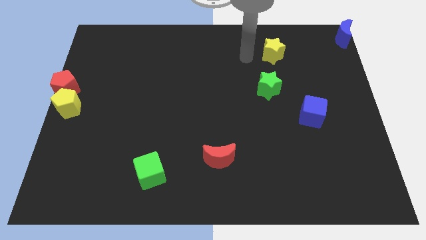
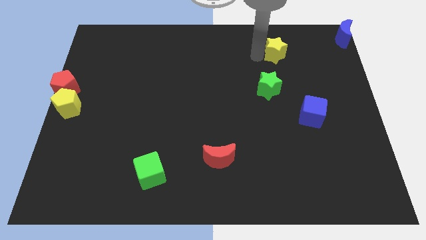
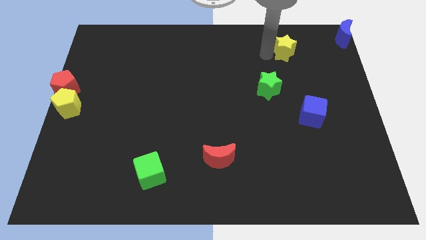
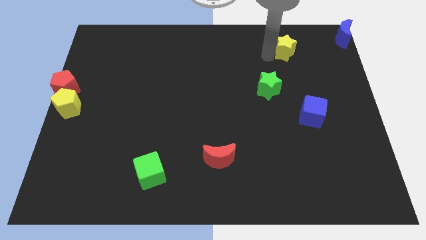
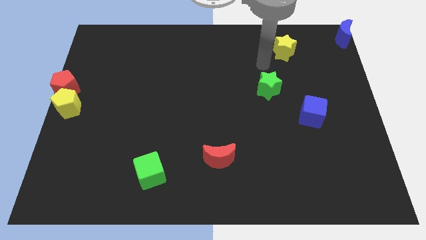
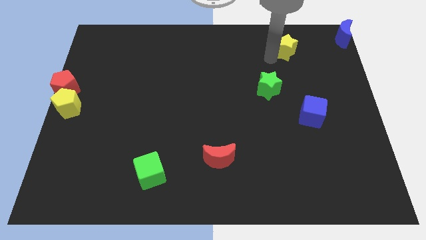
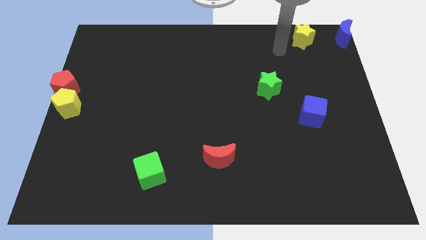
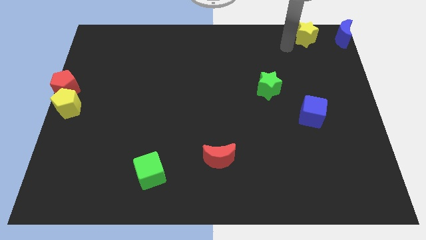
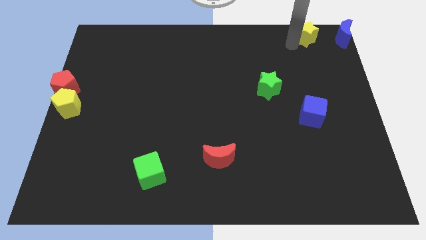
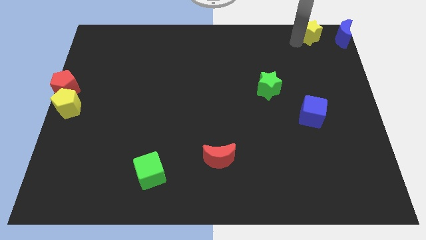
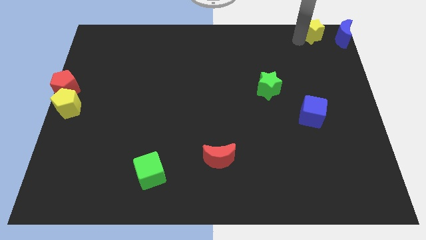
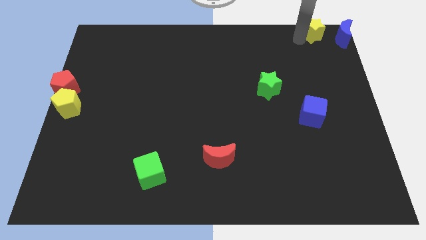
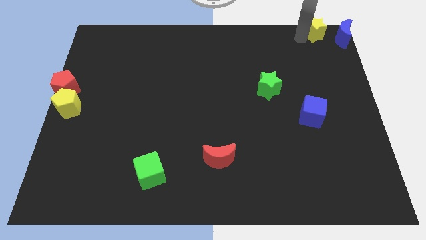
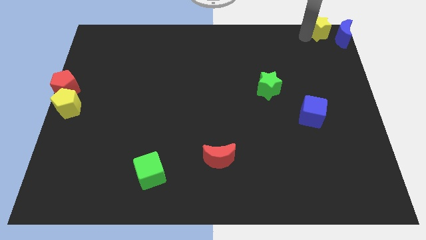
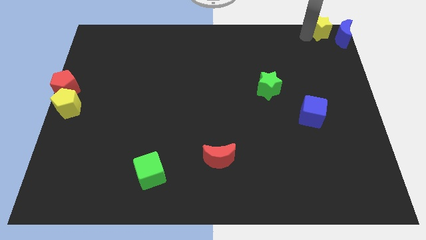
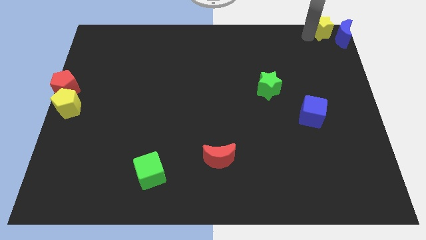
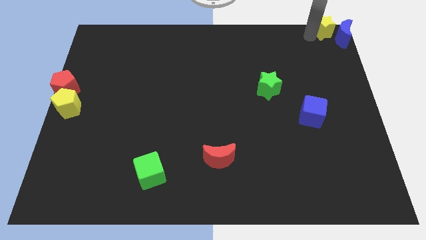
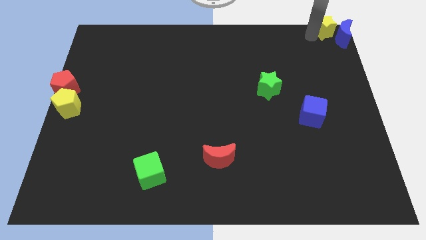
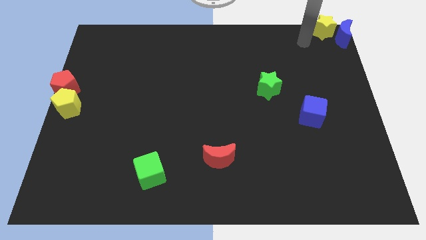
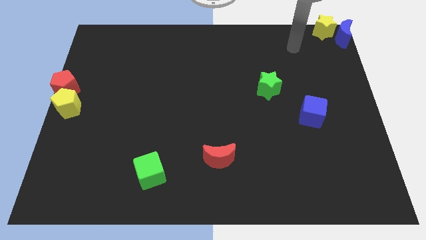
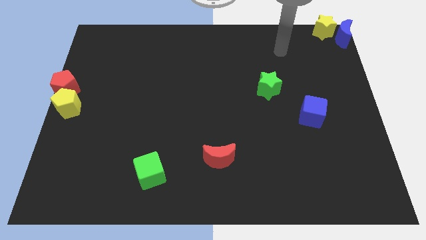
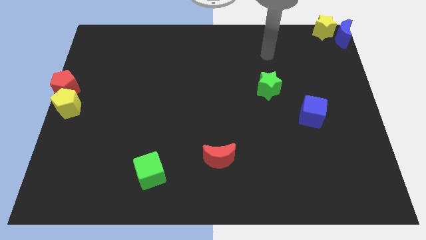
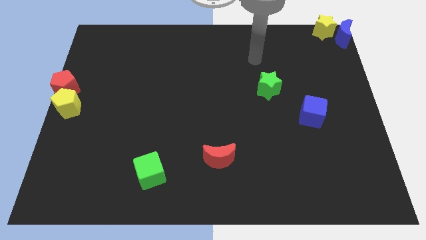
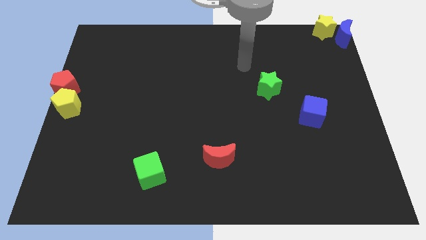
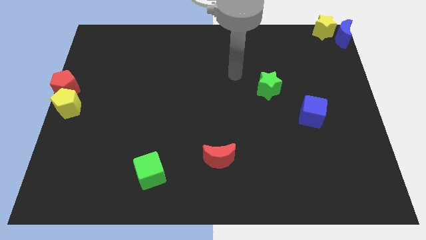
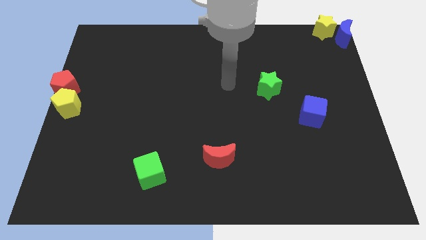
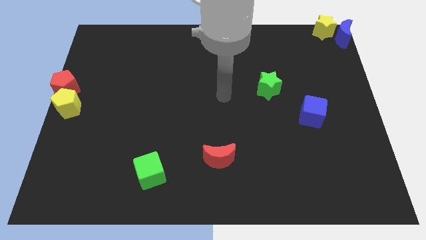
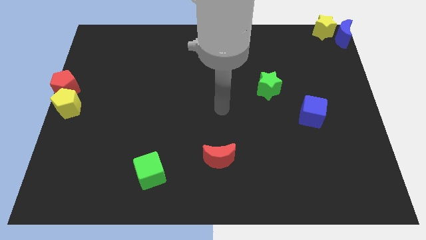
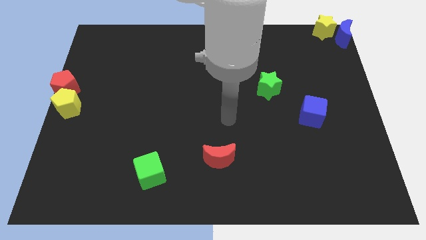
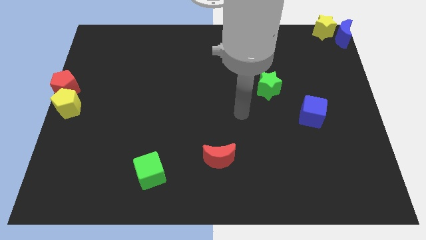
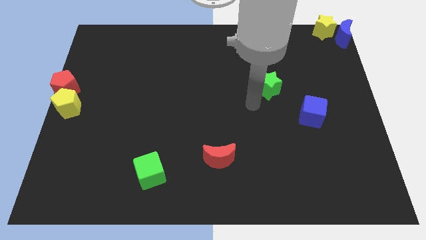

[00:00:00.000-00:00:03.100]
push the yellow star to the left of the blue crescent

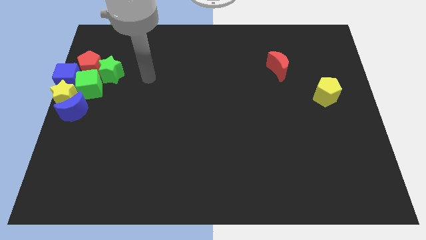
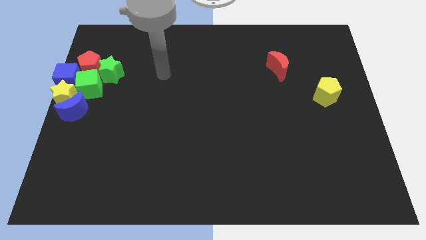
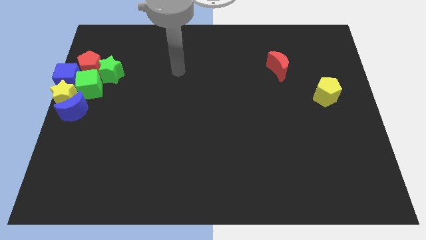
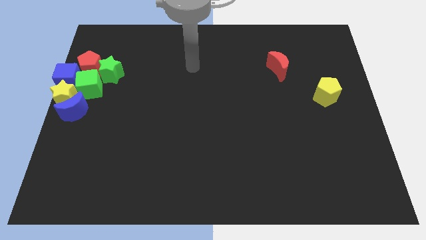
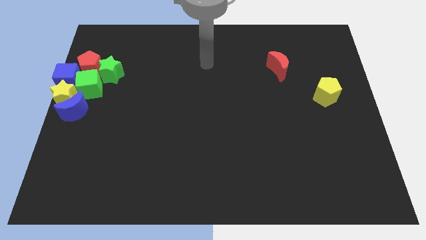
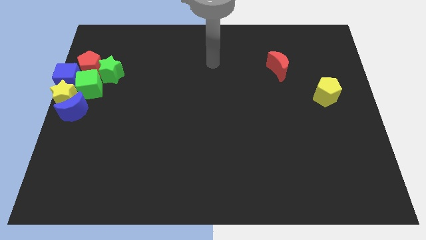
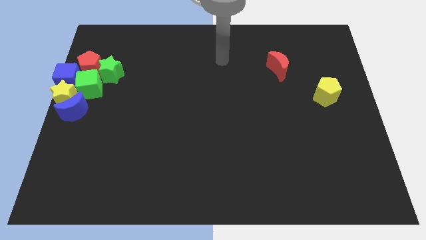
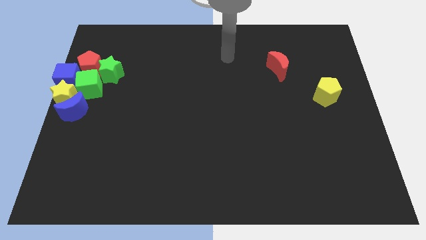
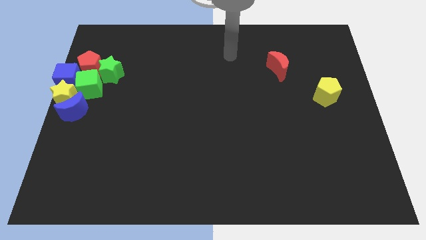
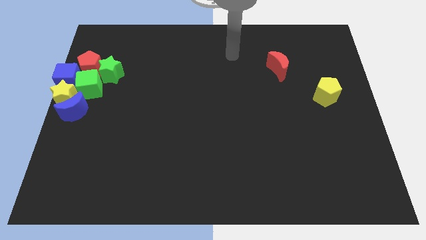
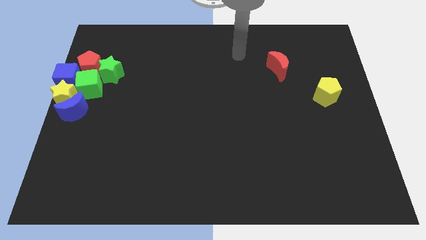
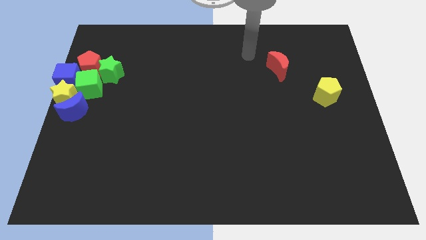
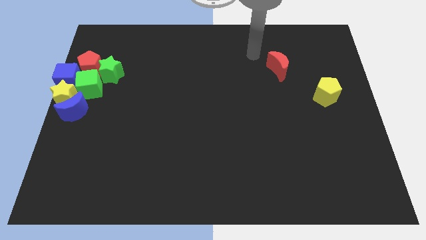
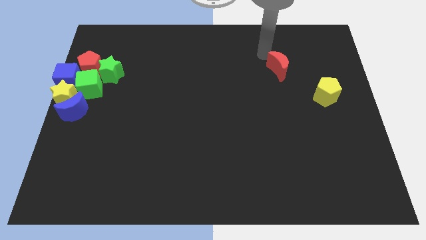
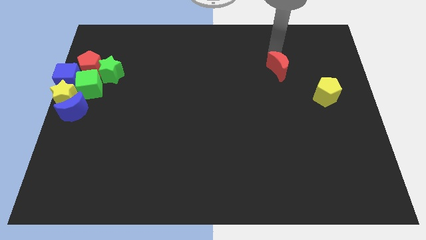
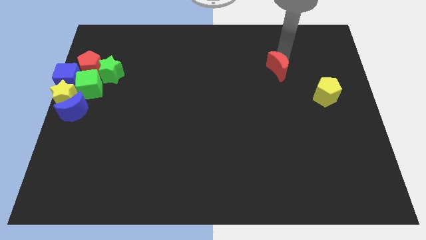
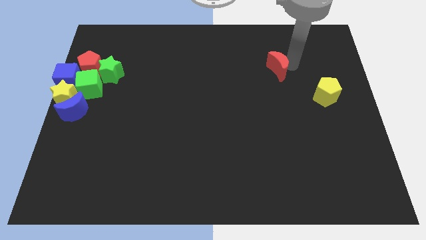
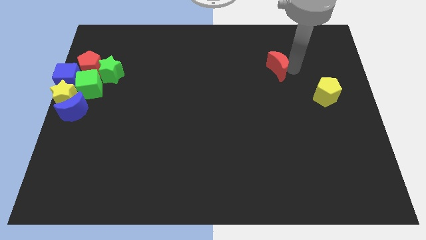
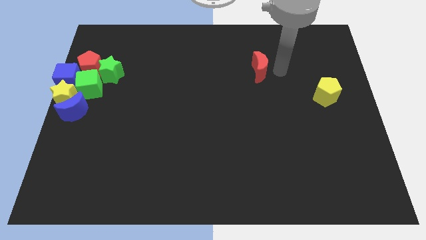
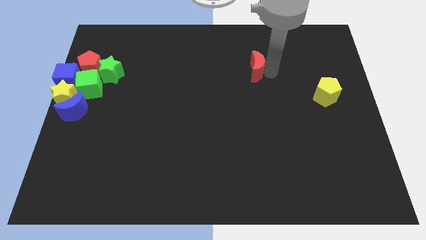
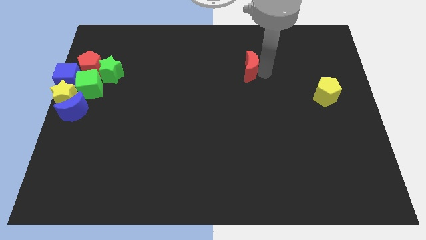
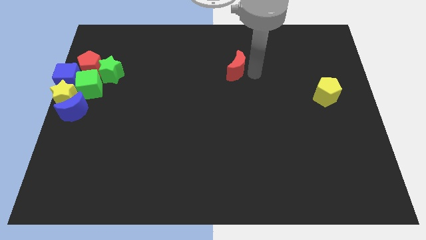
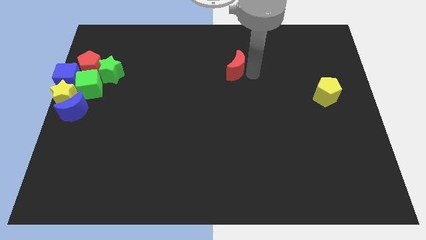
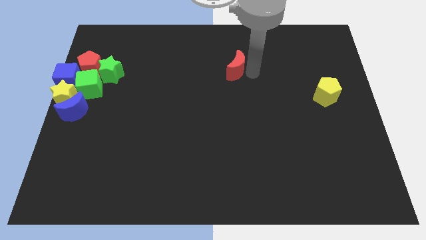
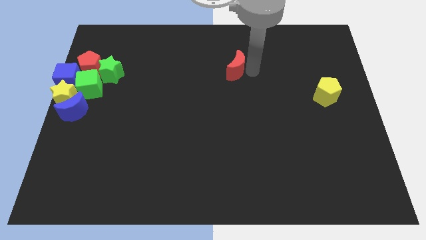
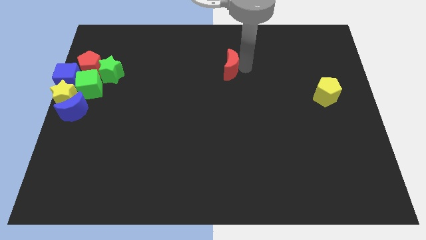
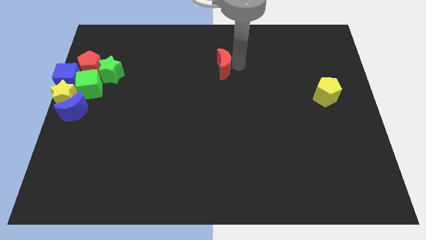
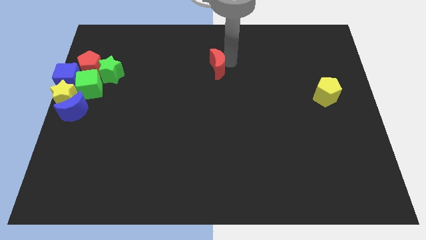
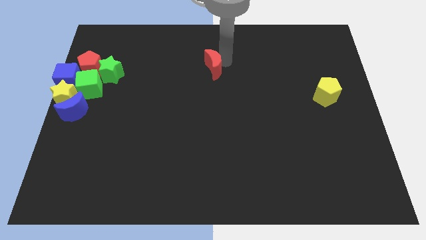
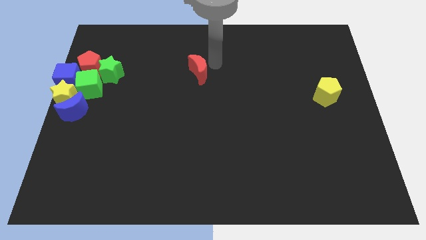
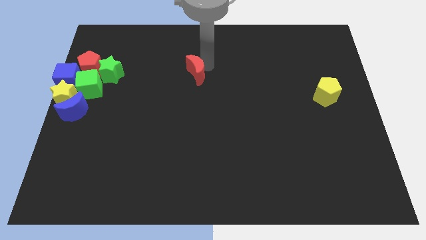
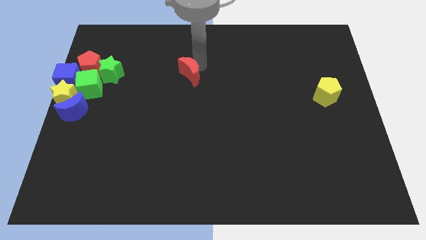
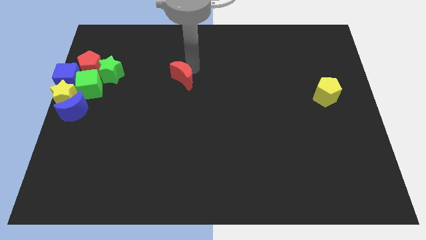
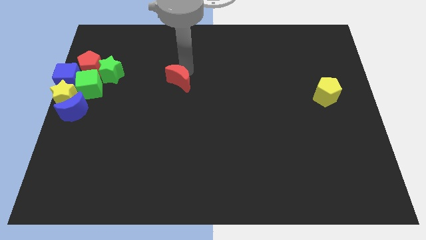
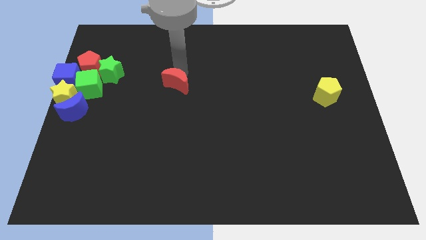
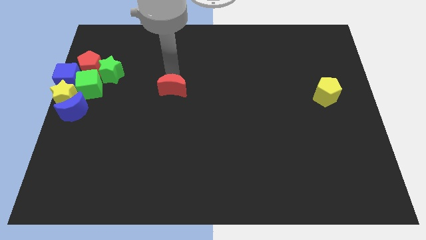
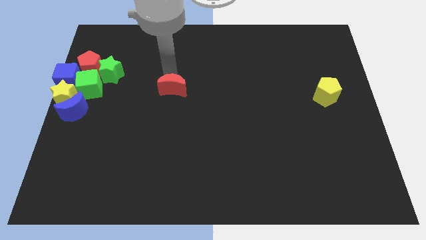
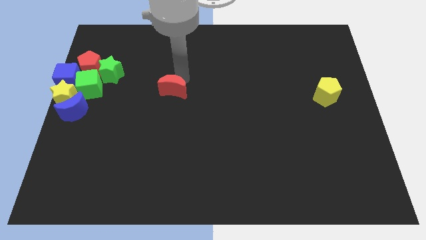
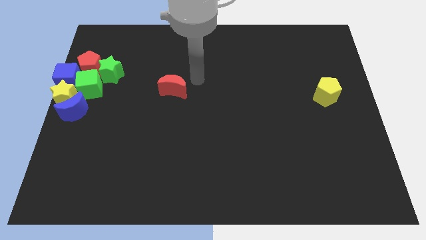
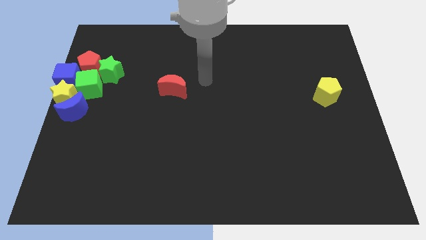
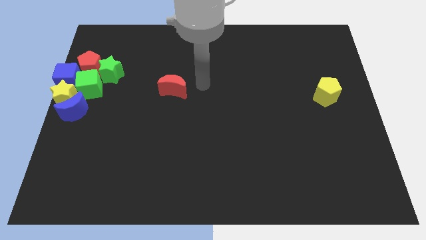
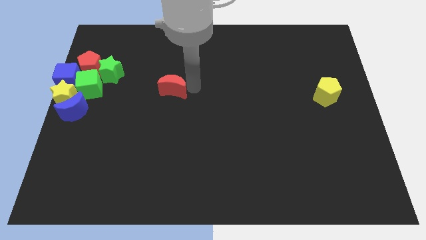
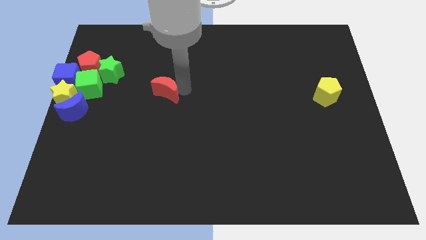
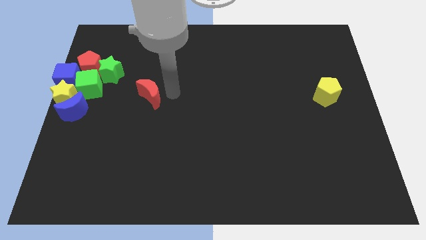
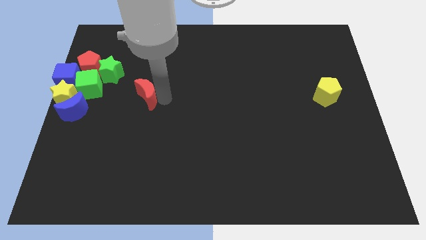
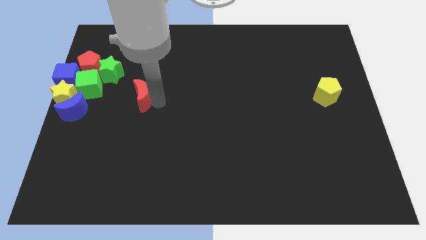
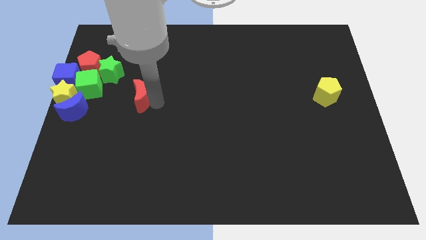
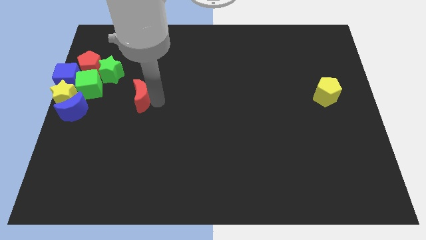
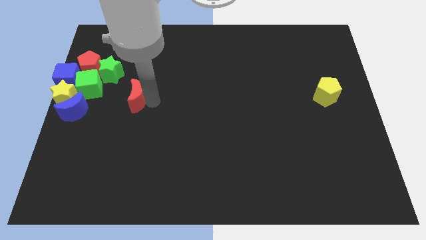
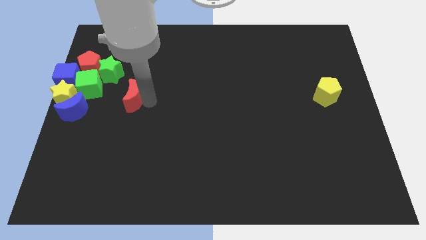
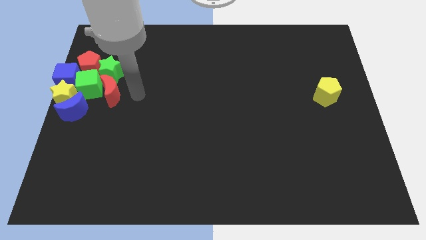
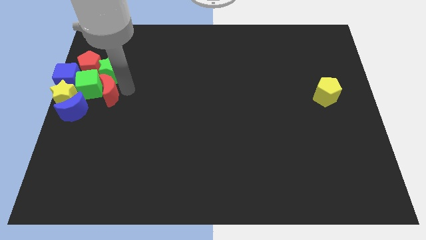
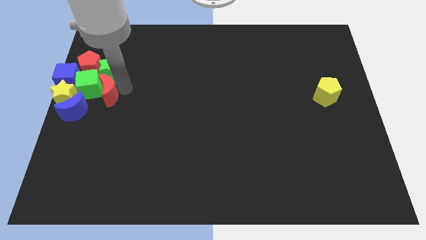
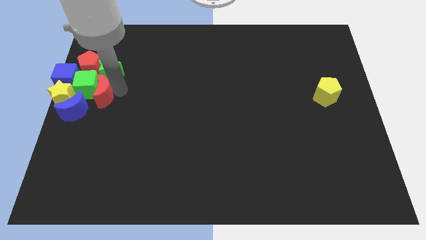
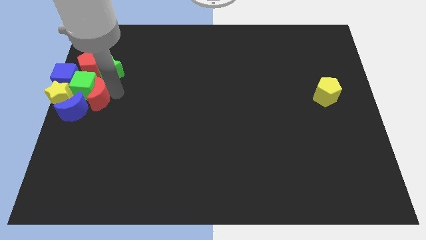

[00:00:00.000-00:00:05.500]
move the red crescent to the right side of the green cube

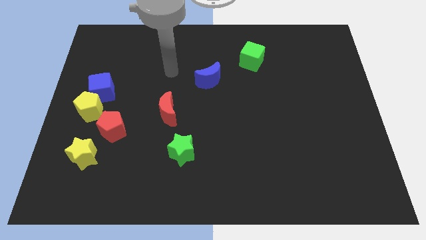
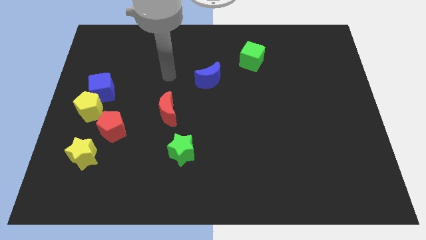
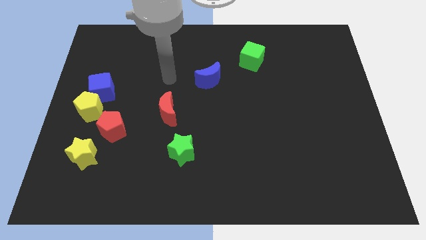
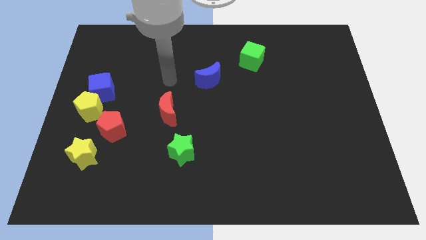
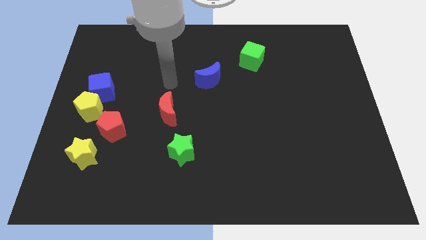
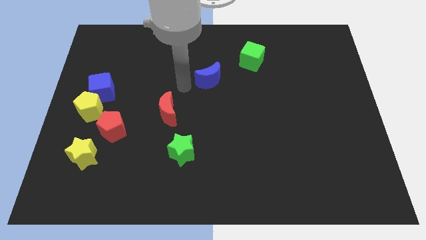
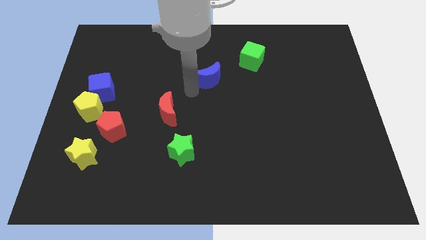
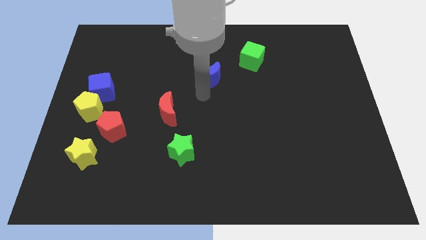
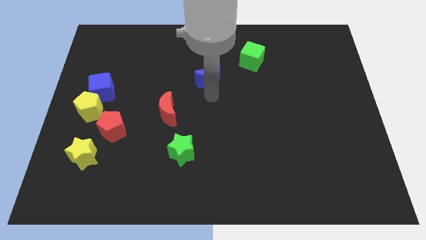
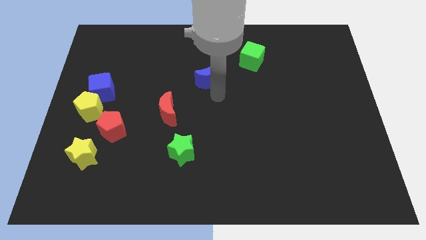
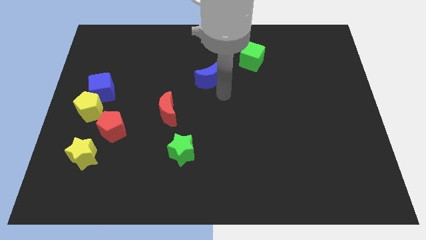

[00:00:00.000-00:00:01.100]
point at the bottom right side of the blue crescent
